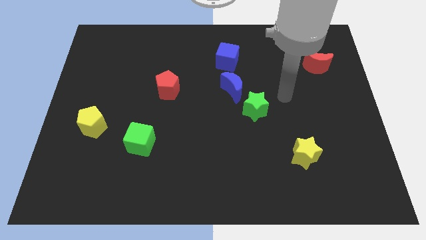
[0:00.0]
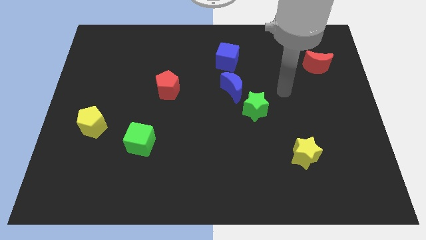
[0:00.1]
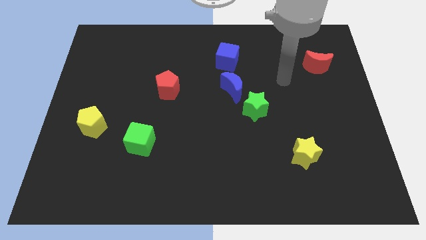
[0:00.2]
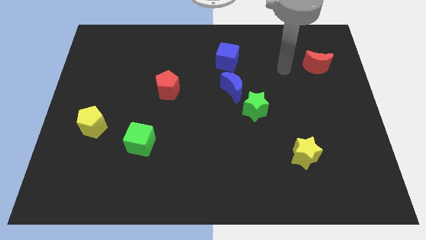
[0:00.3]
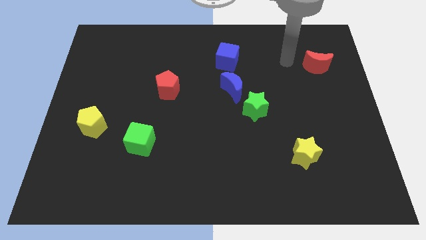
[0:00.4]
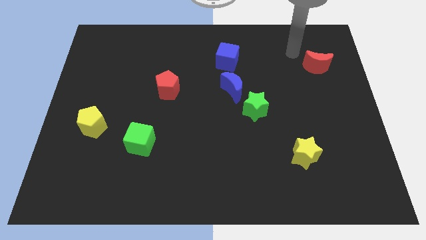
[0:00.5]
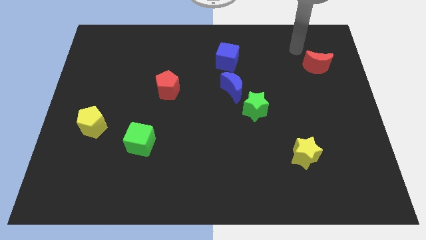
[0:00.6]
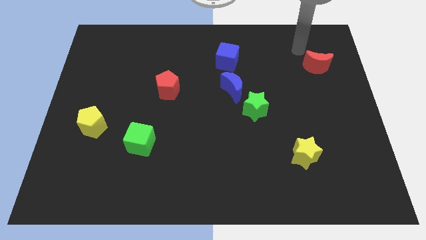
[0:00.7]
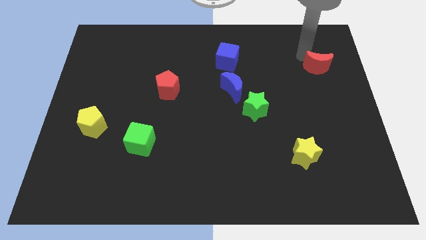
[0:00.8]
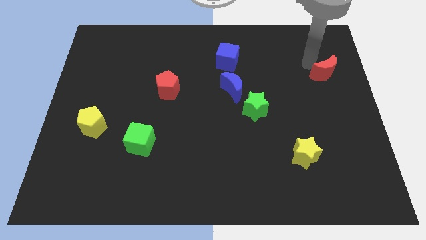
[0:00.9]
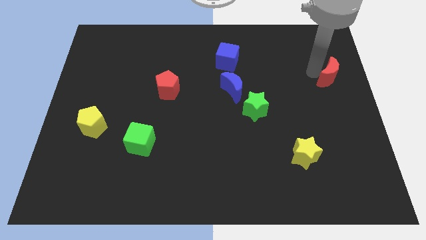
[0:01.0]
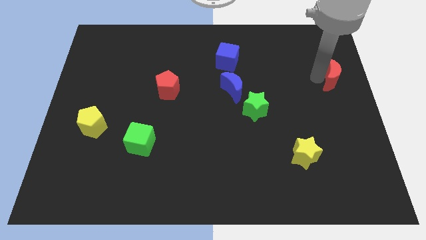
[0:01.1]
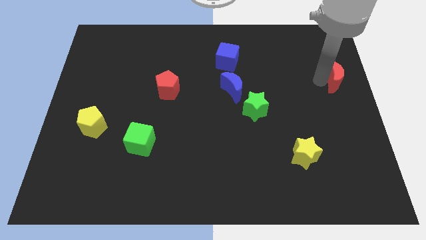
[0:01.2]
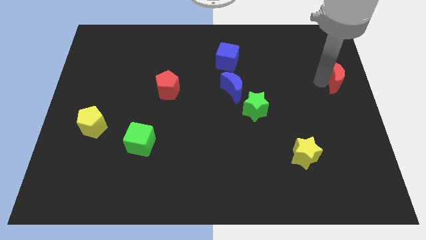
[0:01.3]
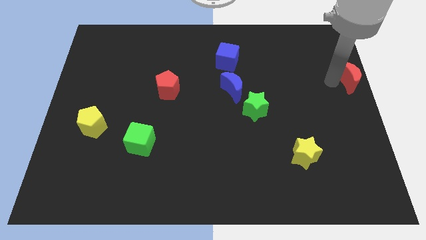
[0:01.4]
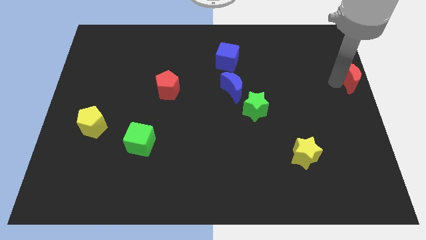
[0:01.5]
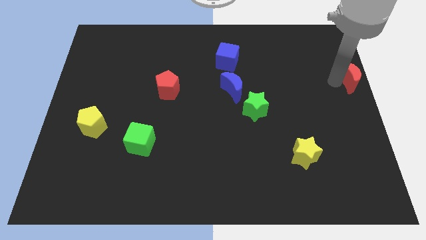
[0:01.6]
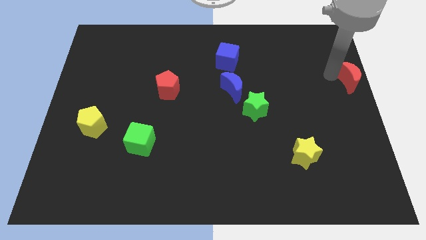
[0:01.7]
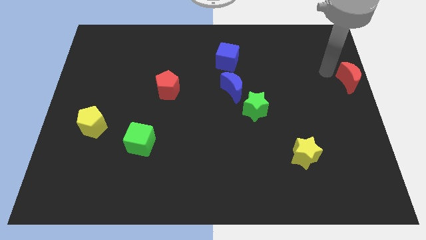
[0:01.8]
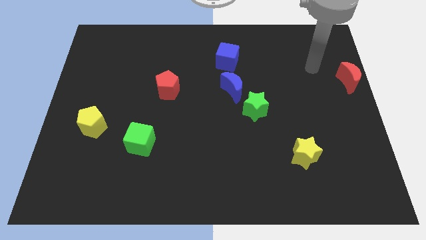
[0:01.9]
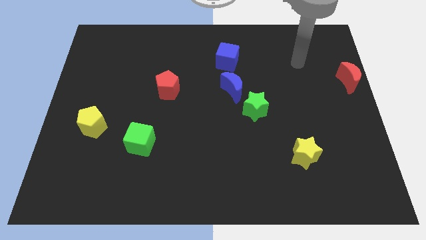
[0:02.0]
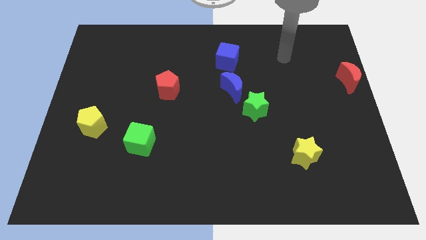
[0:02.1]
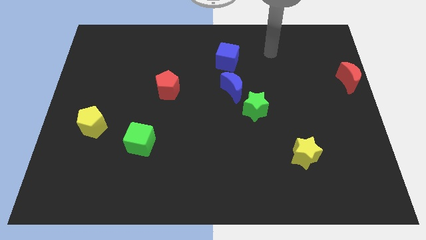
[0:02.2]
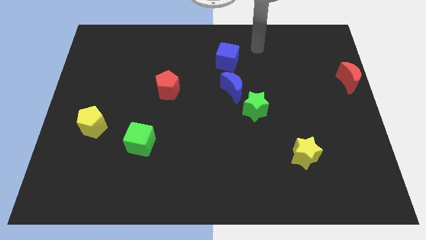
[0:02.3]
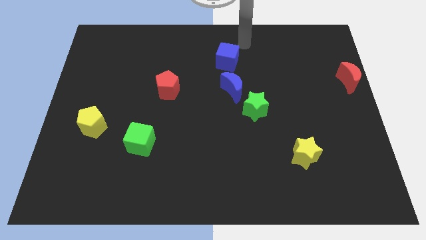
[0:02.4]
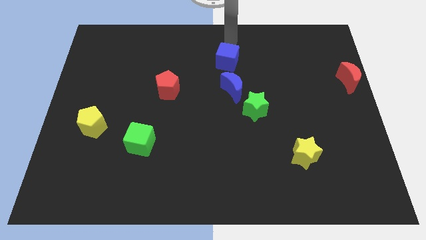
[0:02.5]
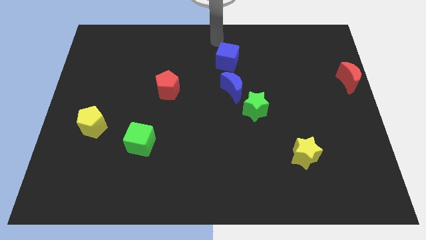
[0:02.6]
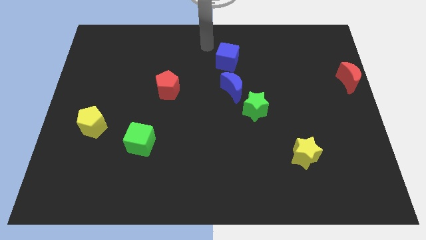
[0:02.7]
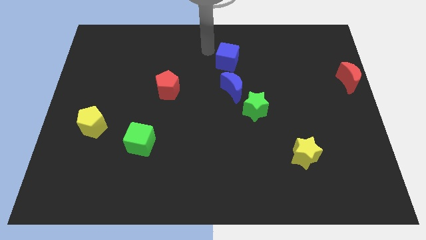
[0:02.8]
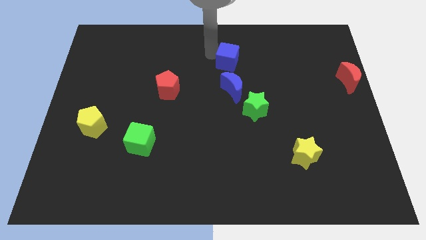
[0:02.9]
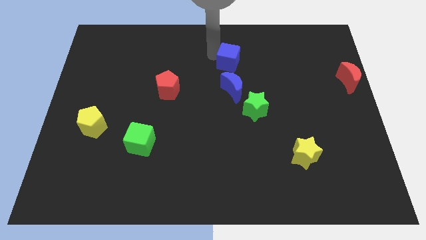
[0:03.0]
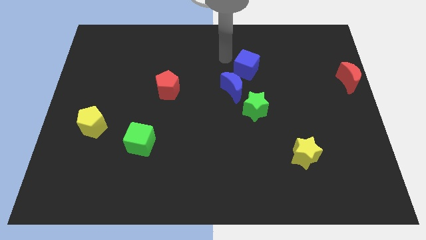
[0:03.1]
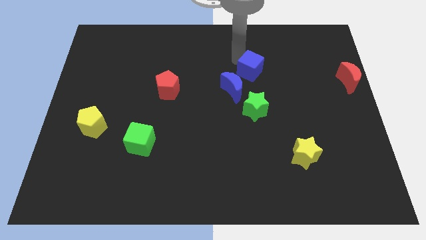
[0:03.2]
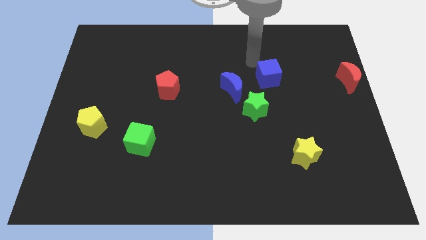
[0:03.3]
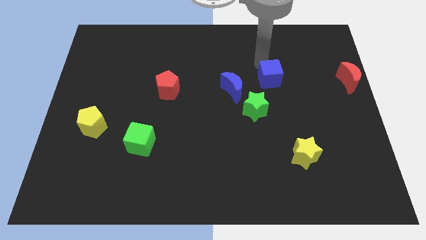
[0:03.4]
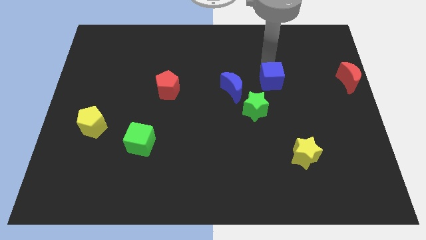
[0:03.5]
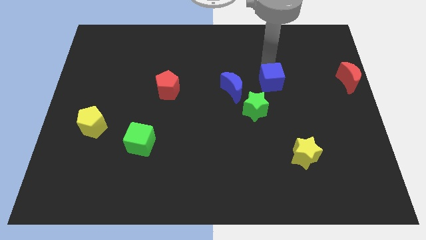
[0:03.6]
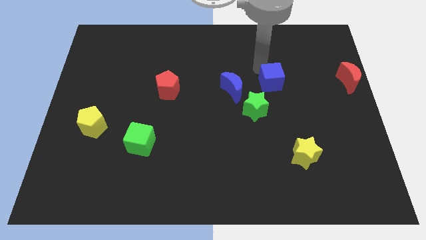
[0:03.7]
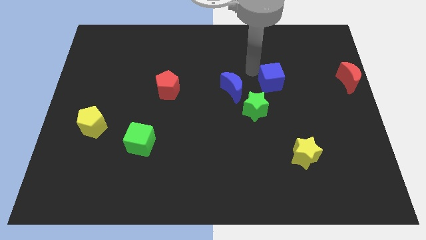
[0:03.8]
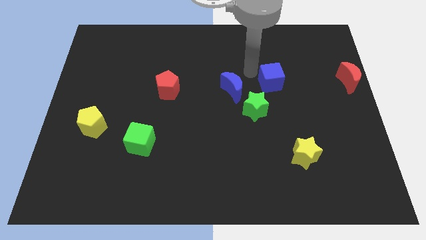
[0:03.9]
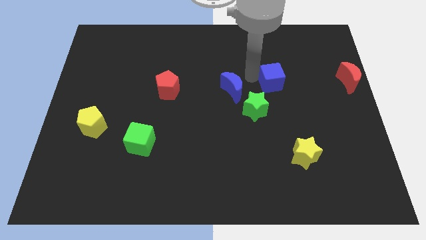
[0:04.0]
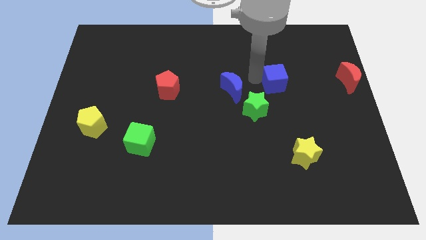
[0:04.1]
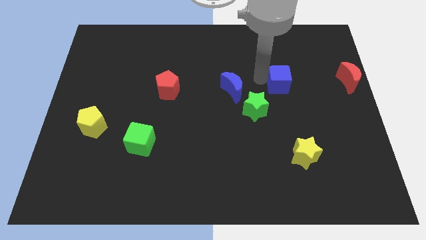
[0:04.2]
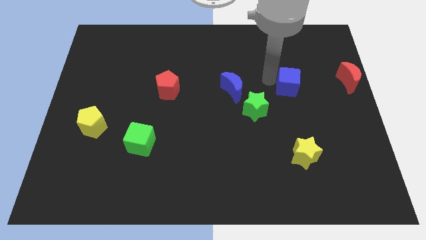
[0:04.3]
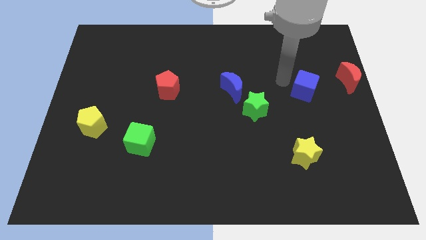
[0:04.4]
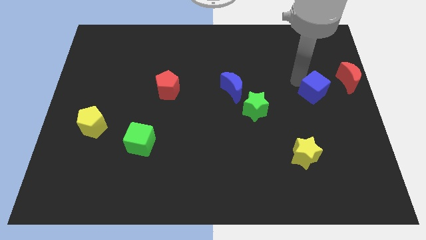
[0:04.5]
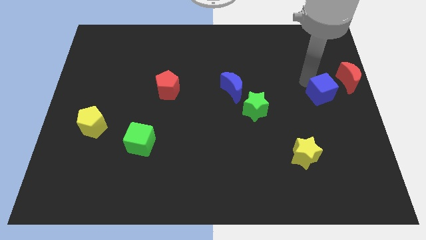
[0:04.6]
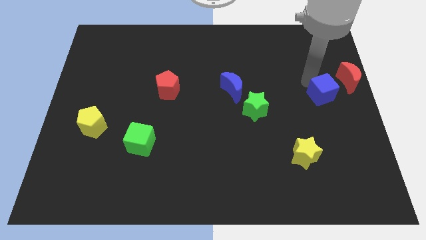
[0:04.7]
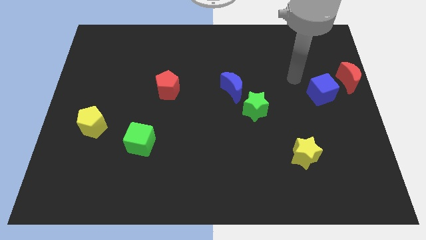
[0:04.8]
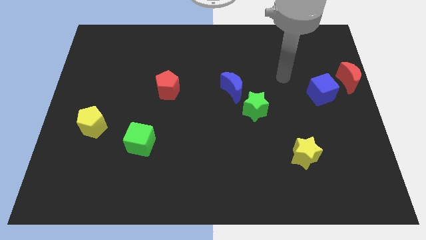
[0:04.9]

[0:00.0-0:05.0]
move the blue cube and red moon to center right

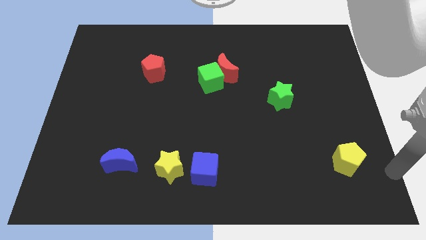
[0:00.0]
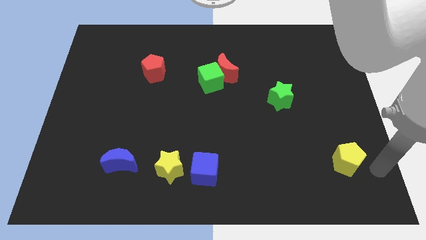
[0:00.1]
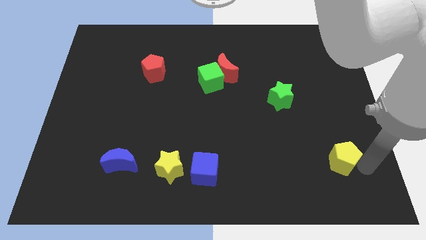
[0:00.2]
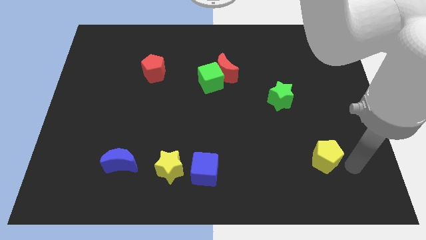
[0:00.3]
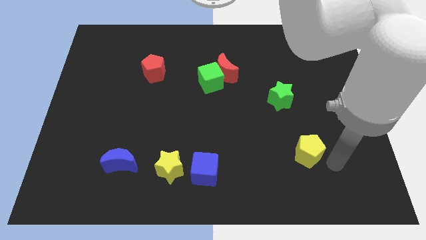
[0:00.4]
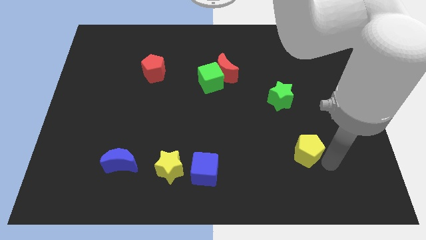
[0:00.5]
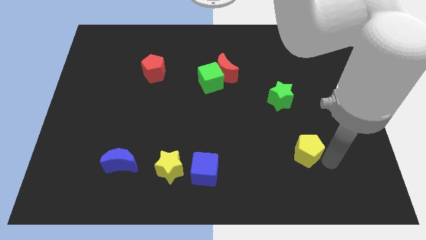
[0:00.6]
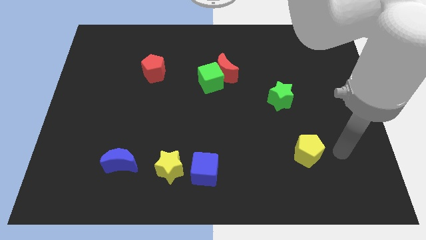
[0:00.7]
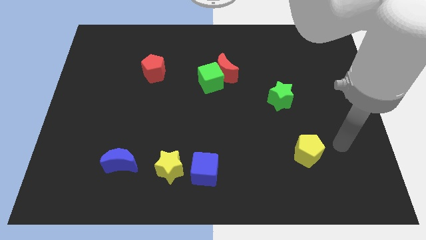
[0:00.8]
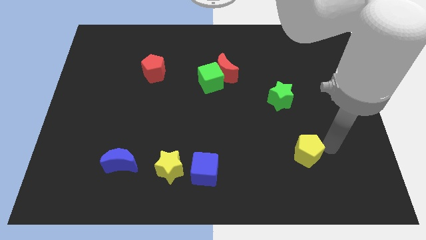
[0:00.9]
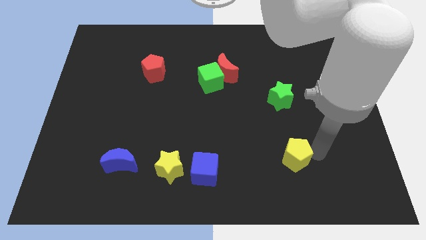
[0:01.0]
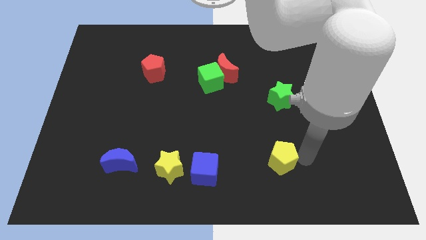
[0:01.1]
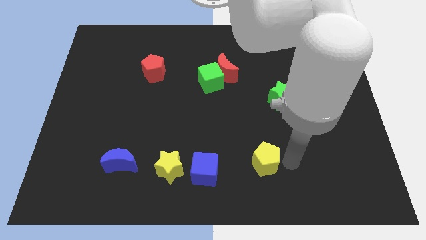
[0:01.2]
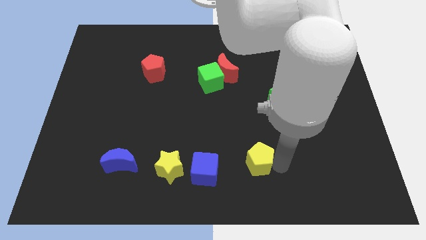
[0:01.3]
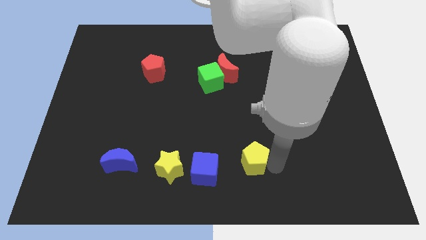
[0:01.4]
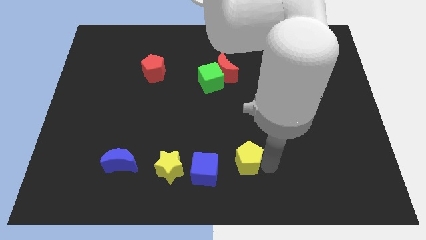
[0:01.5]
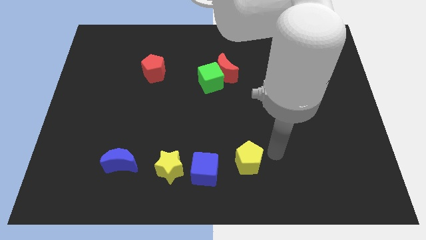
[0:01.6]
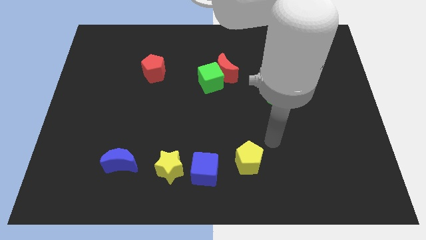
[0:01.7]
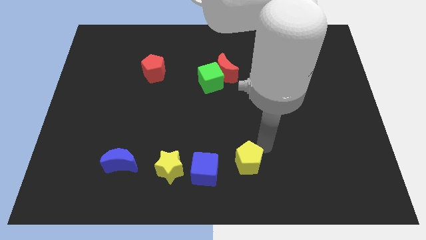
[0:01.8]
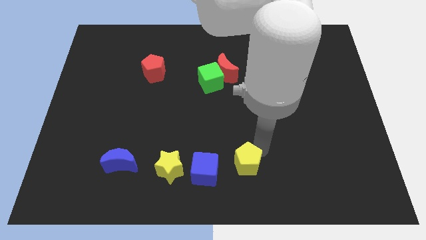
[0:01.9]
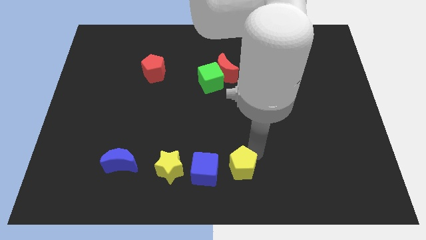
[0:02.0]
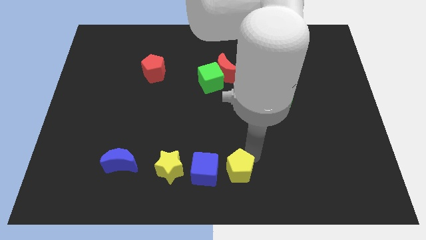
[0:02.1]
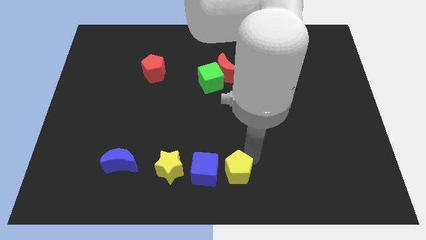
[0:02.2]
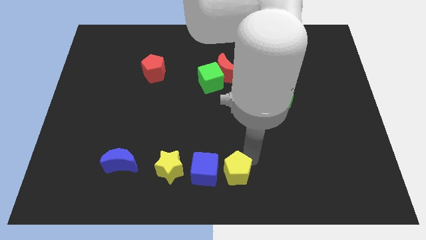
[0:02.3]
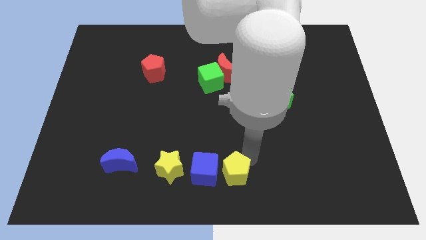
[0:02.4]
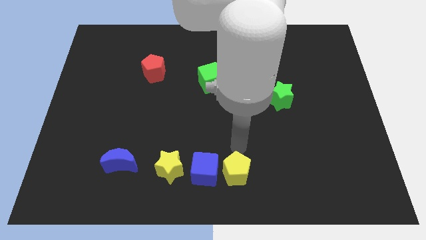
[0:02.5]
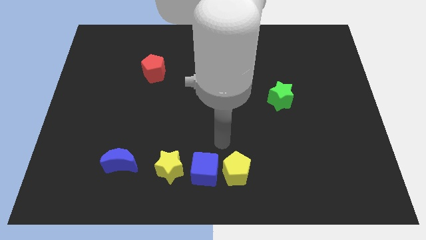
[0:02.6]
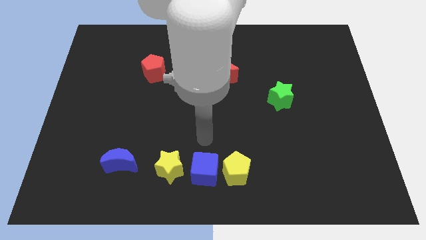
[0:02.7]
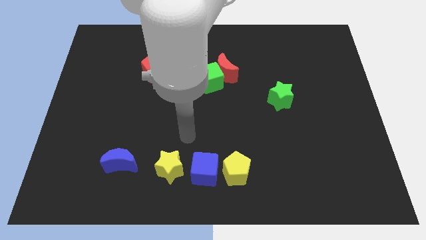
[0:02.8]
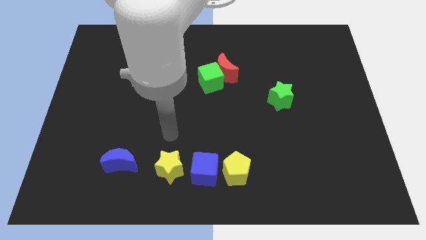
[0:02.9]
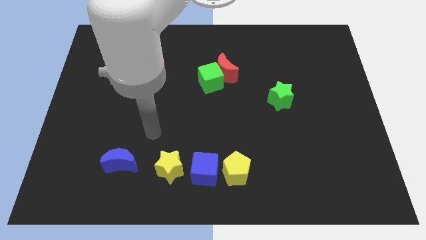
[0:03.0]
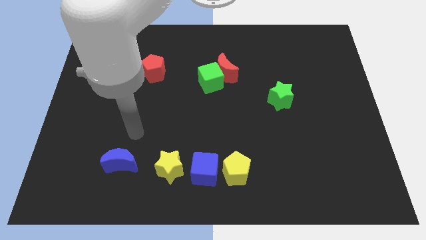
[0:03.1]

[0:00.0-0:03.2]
put yellow pentagon right side to blue cube

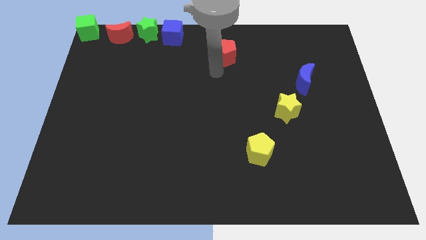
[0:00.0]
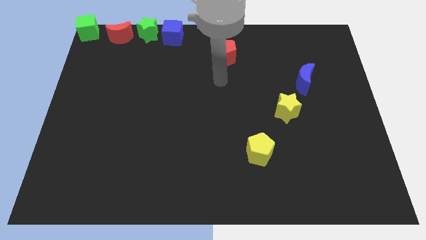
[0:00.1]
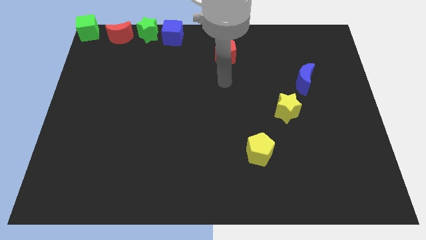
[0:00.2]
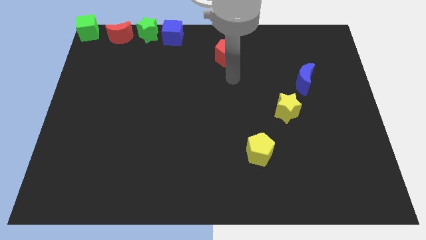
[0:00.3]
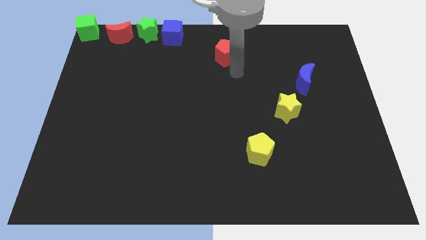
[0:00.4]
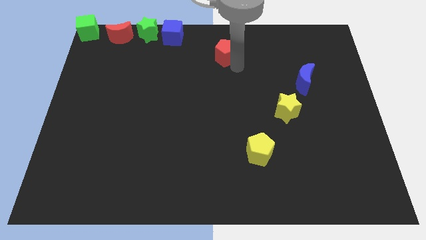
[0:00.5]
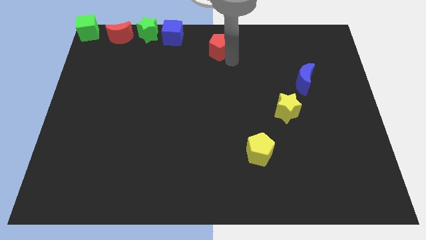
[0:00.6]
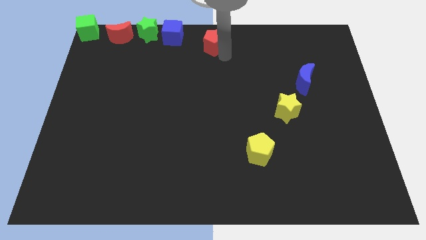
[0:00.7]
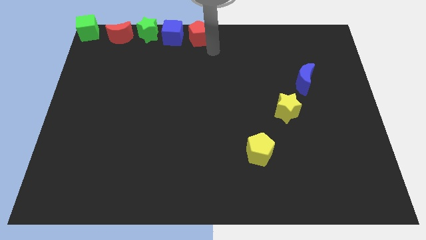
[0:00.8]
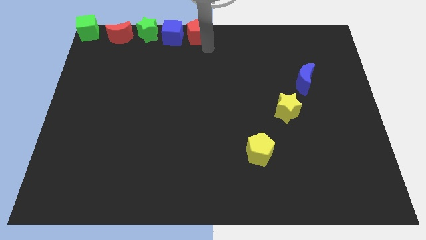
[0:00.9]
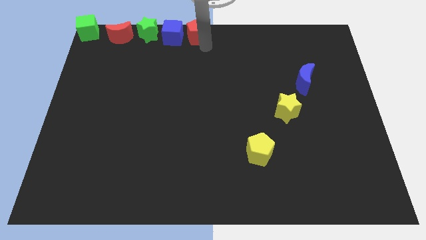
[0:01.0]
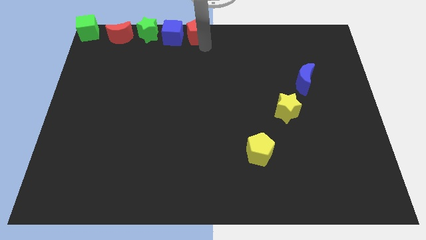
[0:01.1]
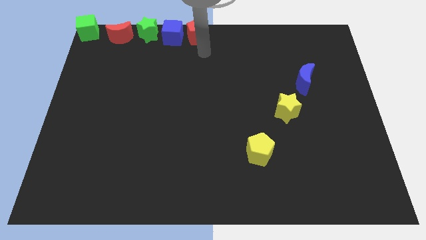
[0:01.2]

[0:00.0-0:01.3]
move the red pentagon to the top center of the board
